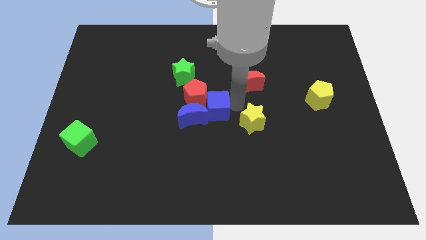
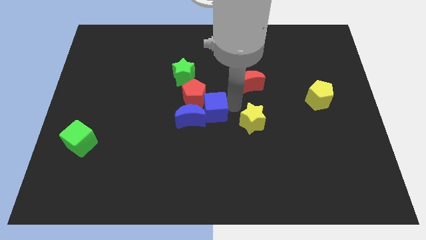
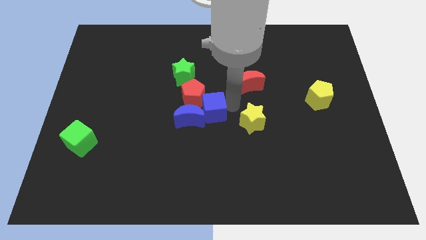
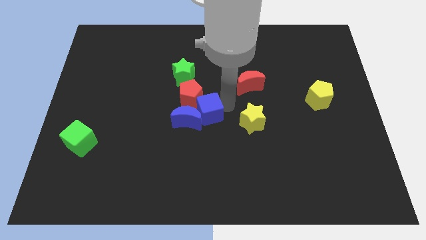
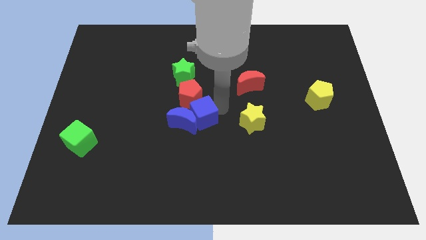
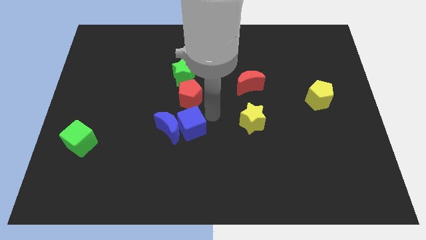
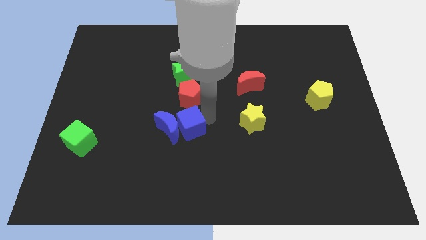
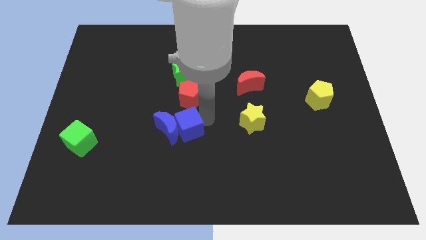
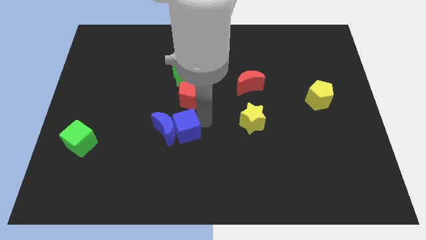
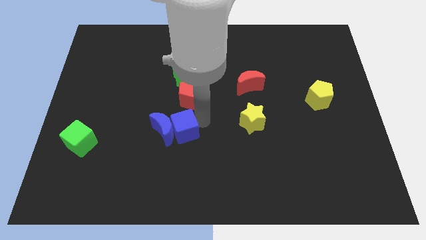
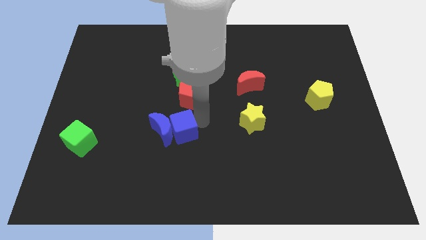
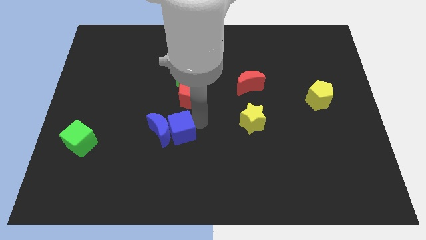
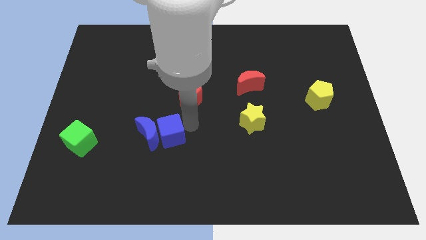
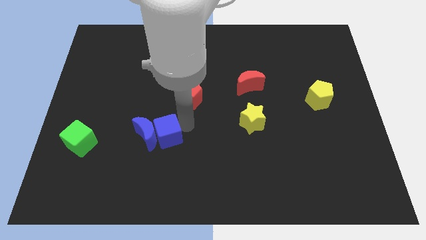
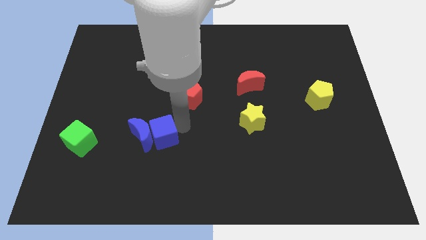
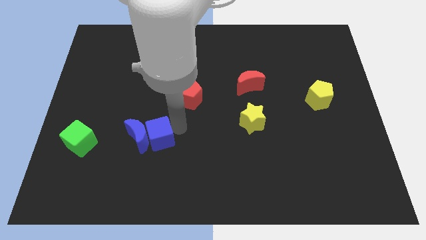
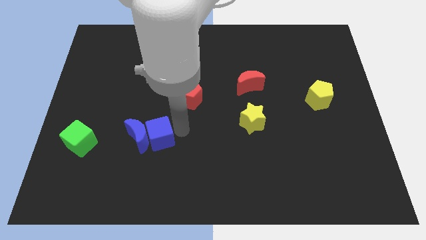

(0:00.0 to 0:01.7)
push the blue cube into the blue crescent towards the left

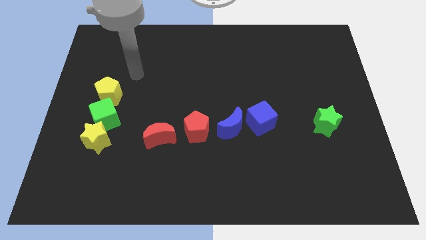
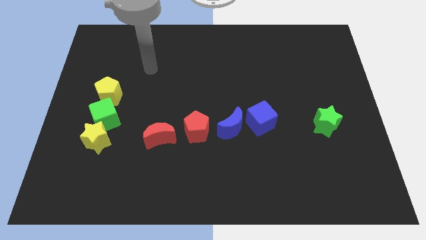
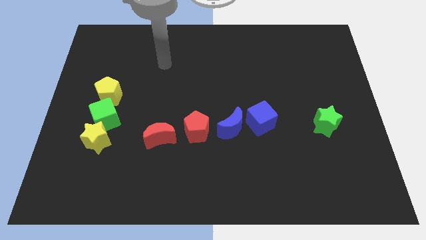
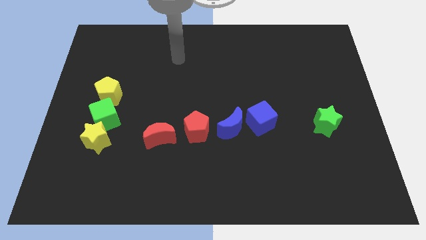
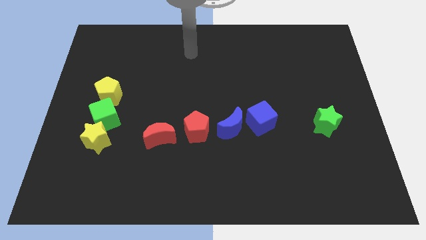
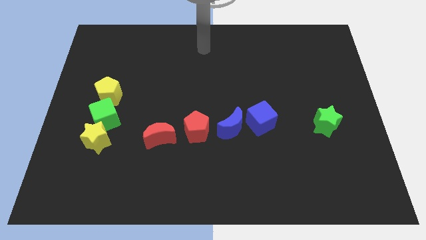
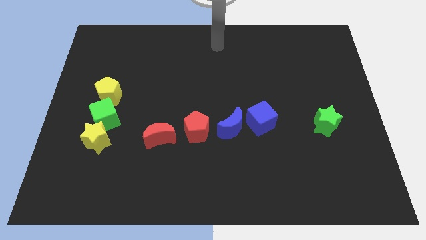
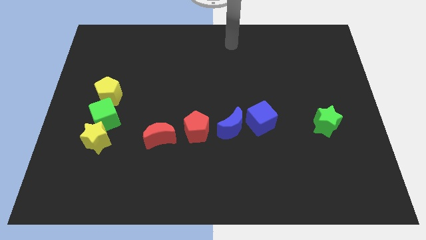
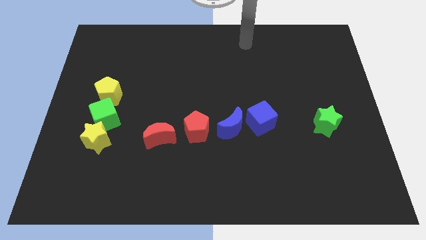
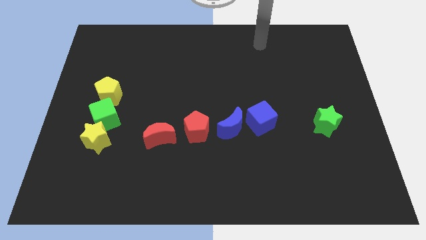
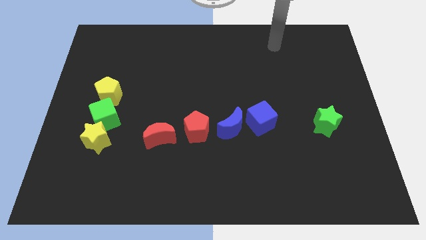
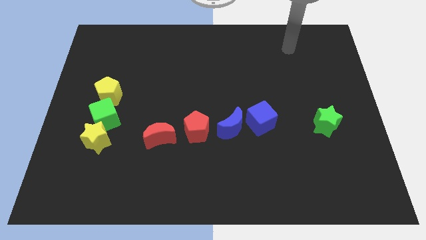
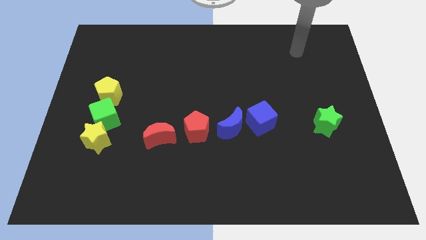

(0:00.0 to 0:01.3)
move the arm towards the top right corner

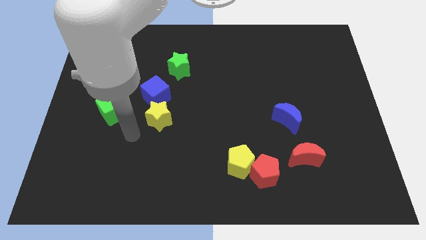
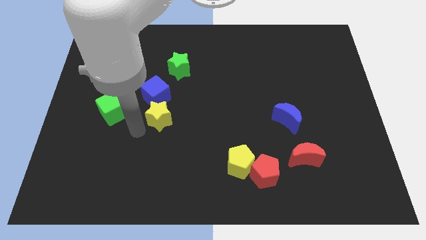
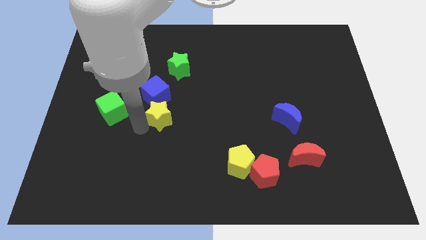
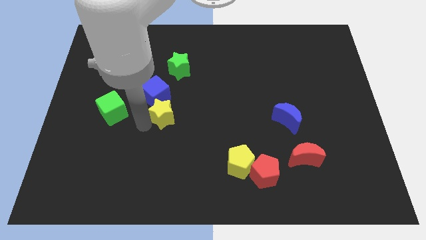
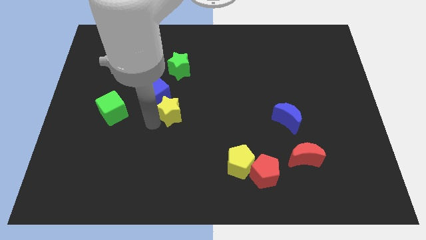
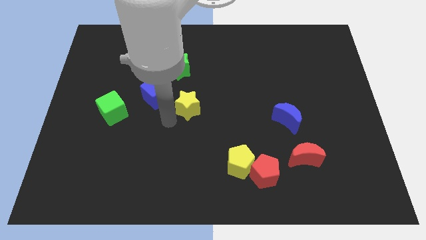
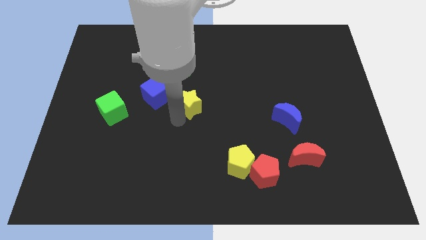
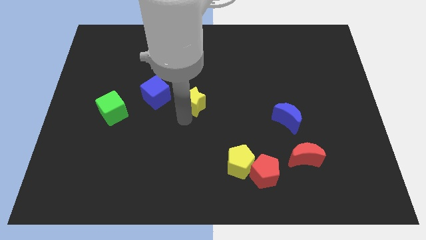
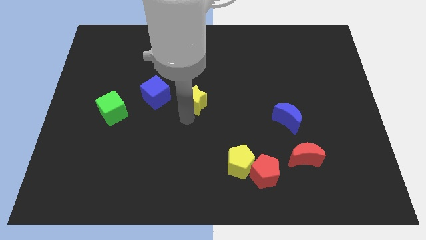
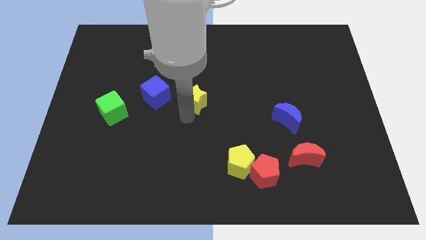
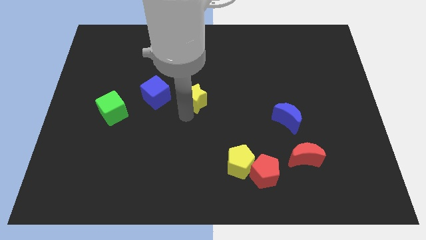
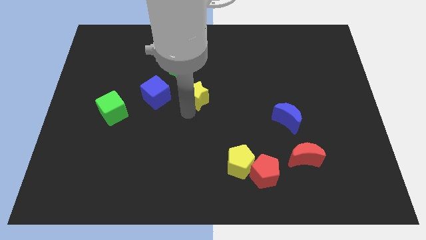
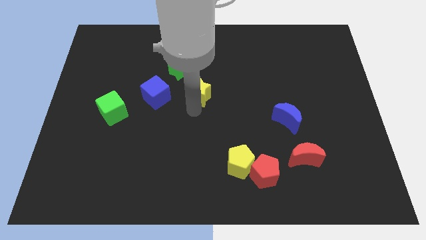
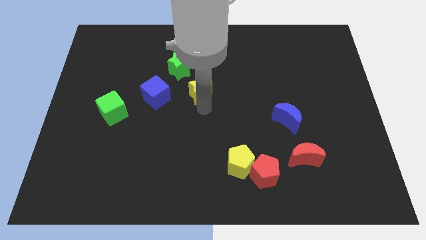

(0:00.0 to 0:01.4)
separate the yellow star from blue cube

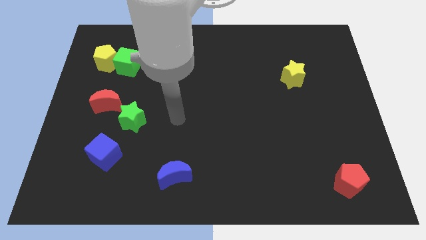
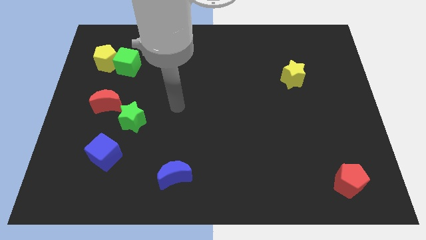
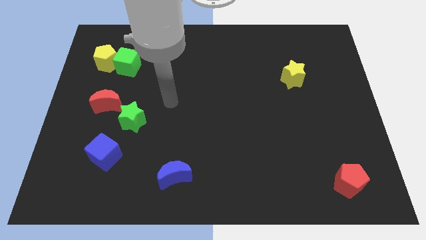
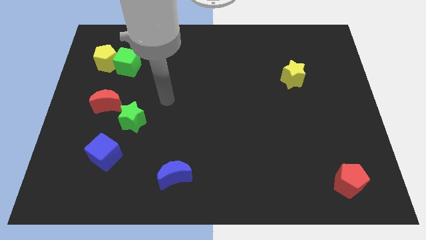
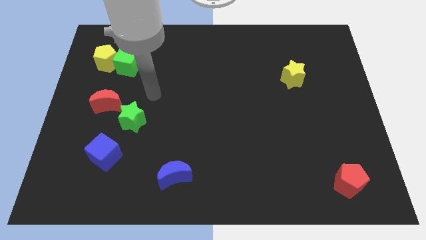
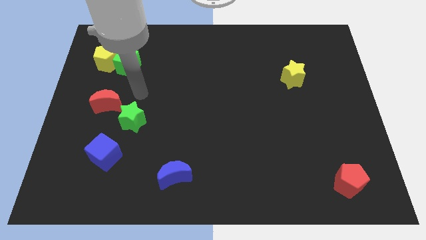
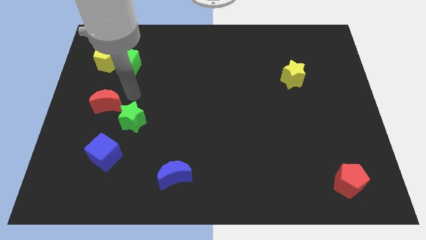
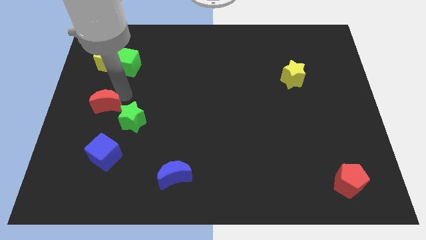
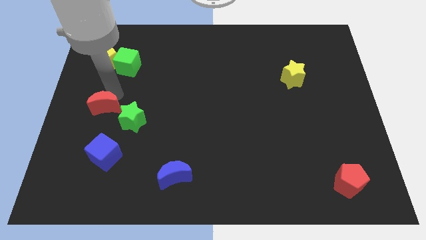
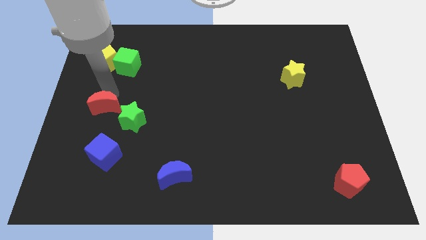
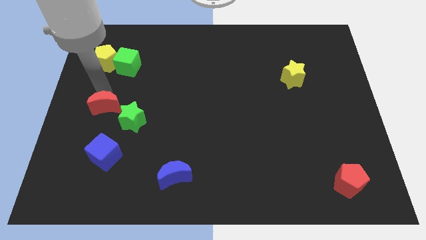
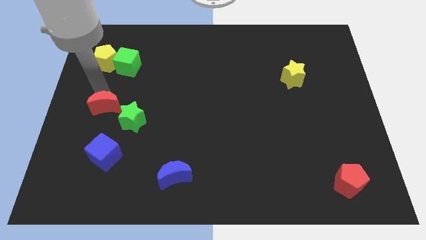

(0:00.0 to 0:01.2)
point your arm towards the red moon

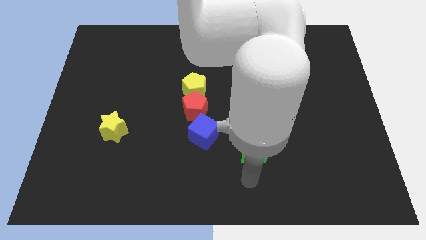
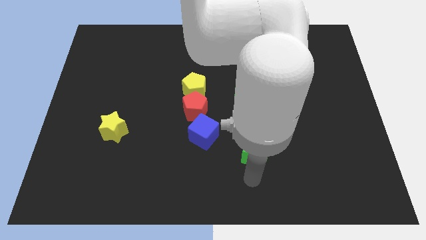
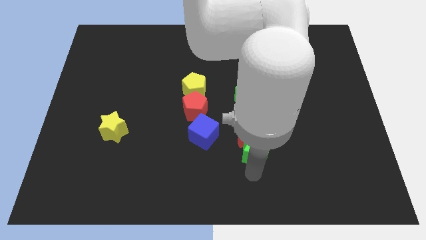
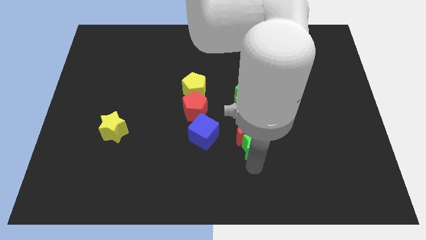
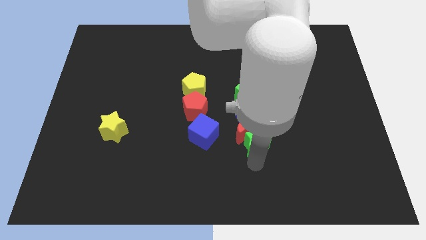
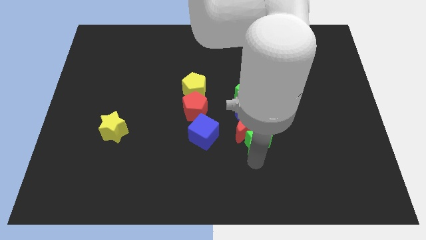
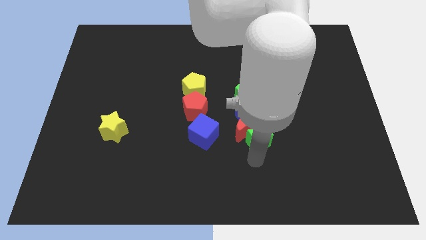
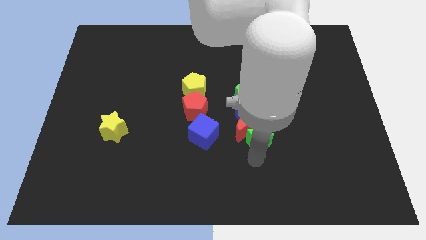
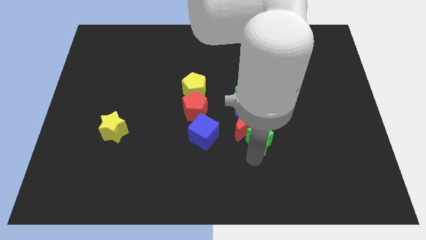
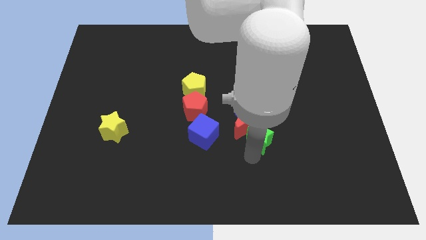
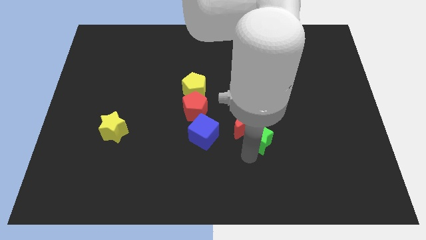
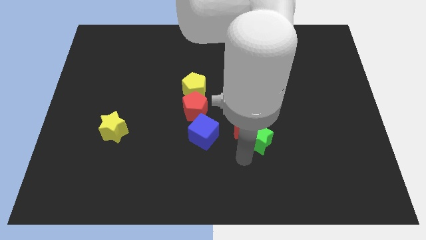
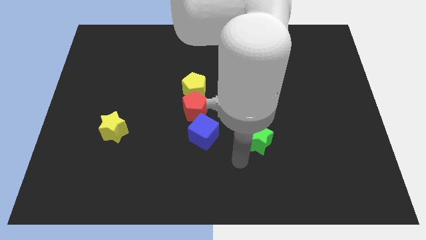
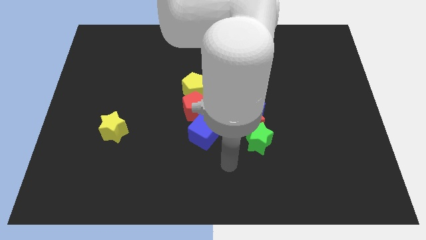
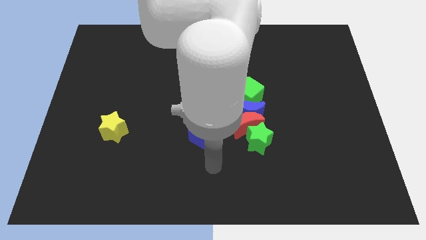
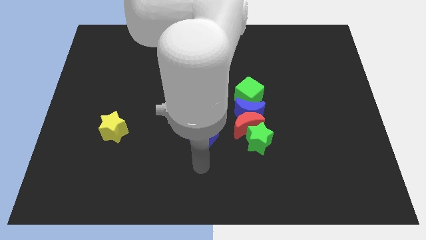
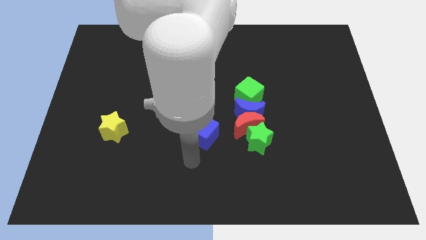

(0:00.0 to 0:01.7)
push the green star into the red crescent

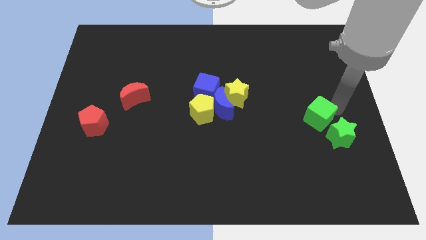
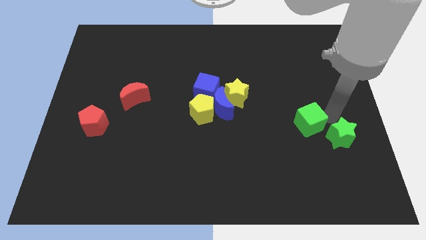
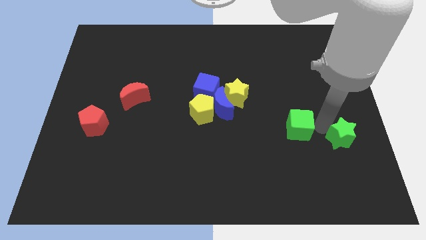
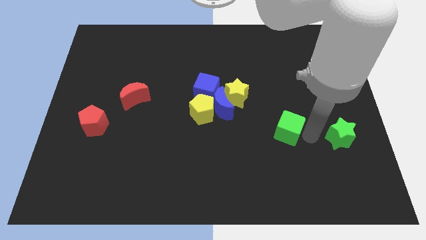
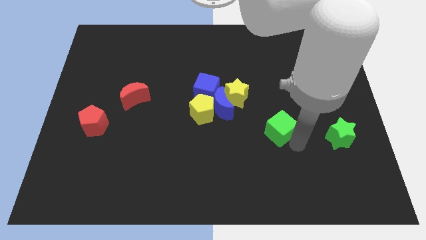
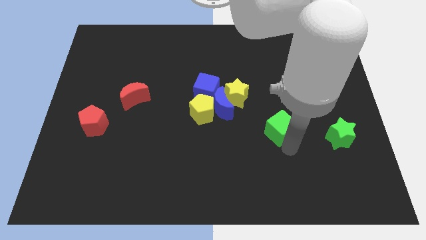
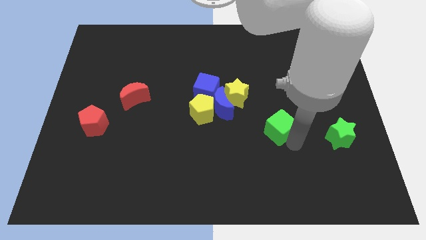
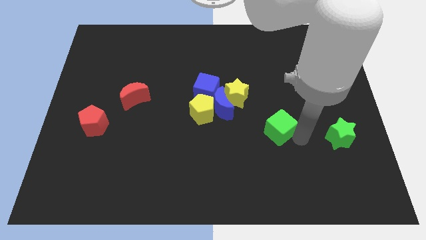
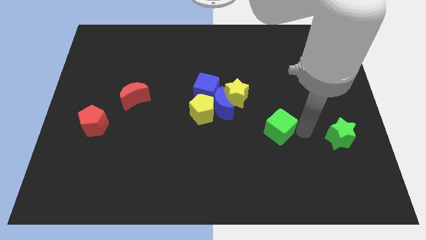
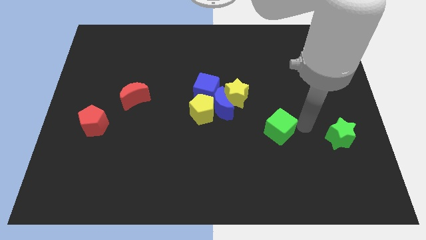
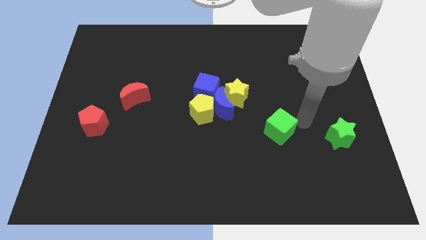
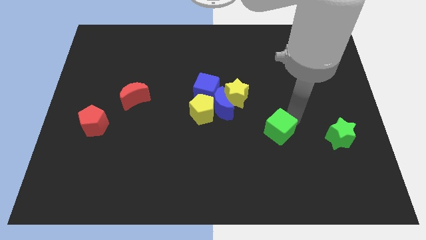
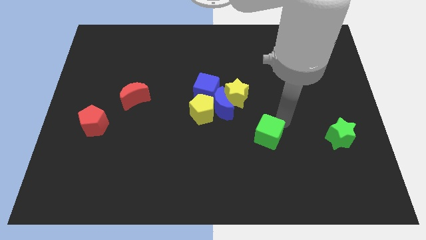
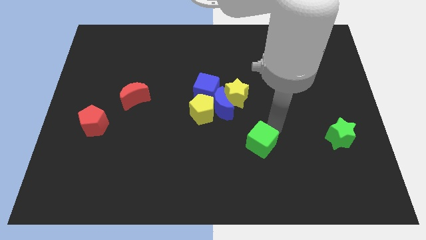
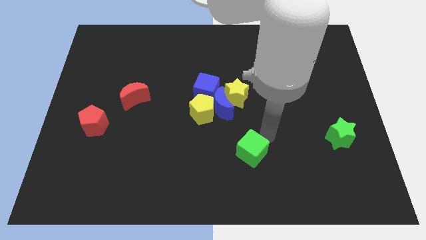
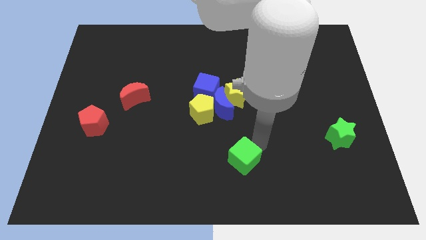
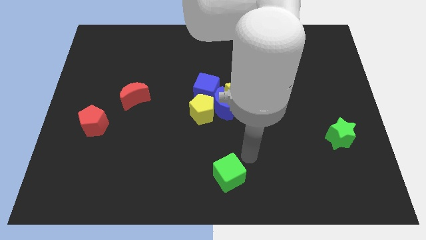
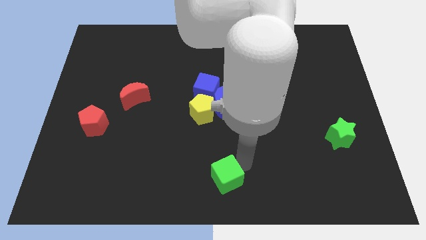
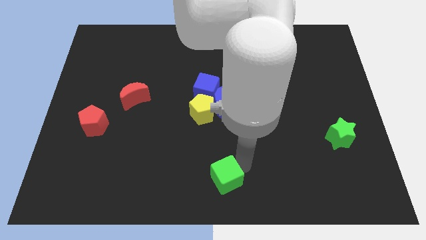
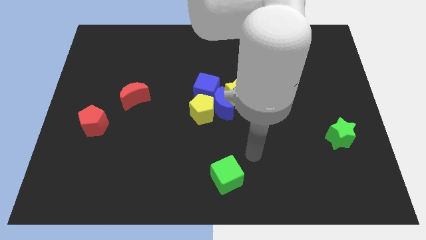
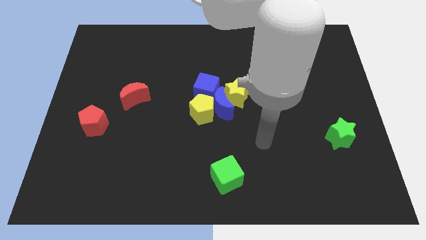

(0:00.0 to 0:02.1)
push the green cube to the bottom center
